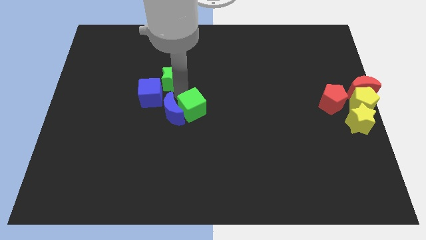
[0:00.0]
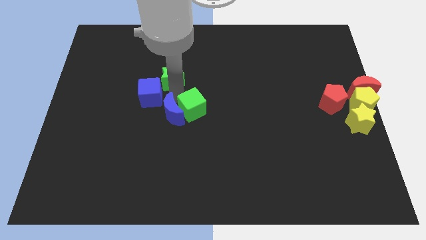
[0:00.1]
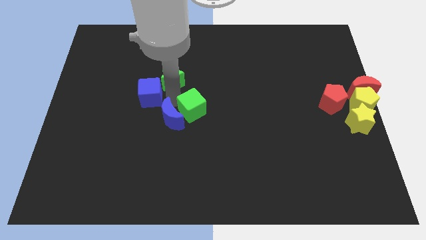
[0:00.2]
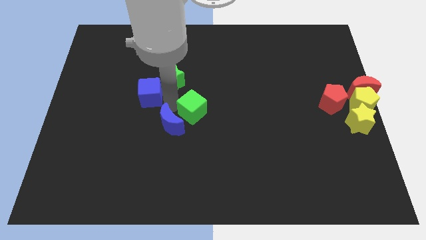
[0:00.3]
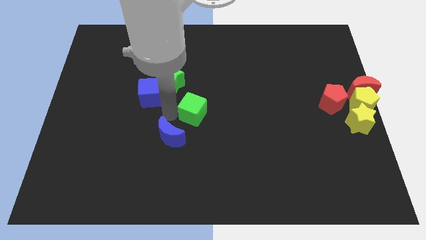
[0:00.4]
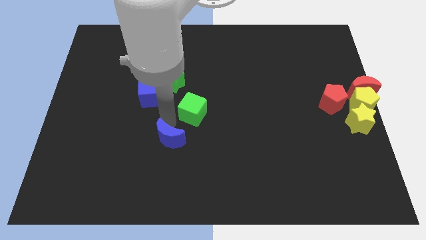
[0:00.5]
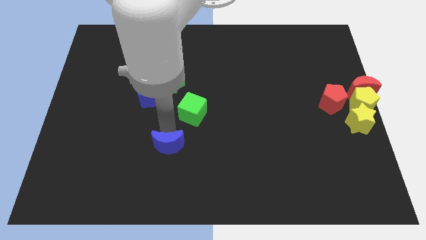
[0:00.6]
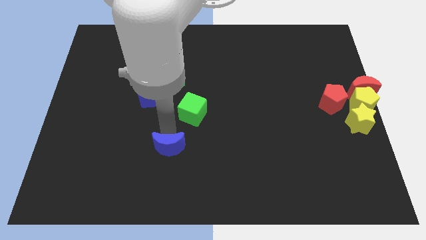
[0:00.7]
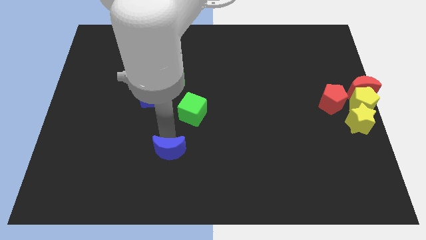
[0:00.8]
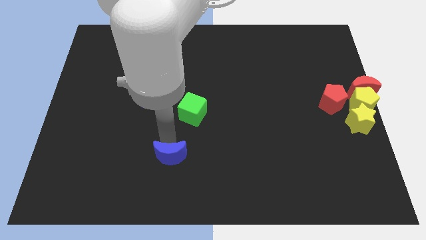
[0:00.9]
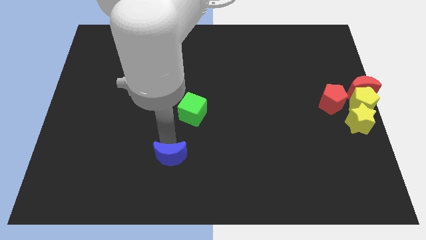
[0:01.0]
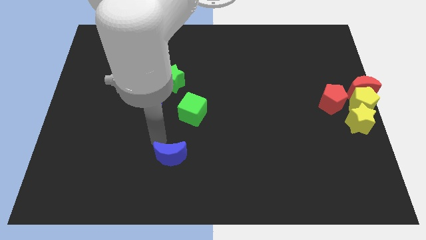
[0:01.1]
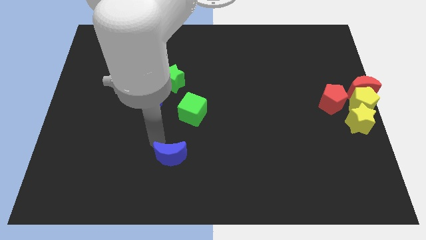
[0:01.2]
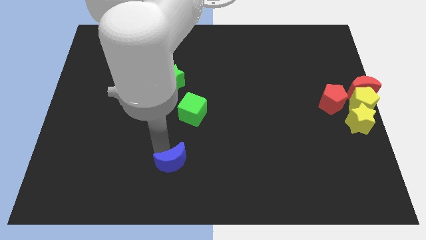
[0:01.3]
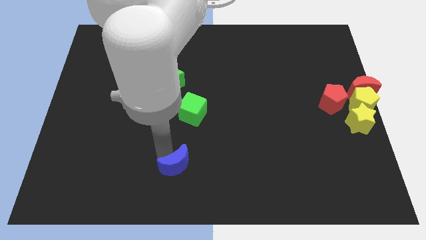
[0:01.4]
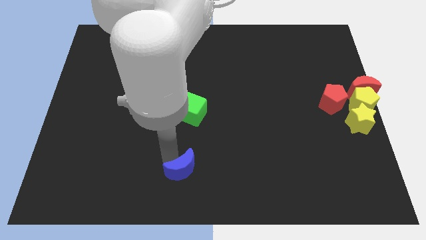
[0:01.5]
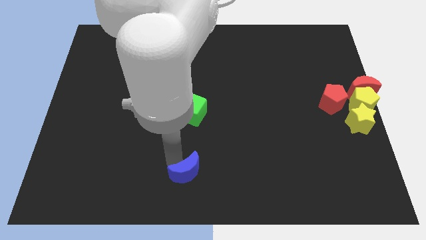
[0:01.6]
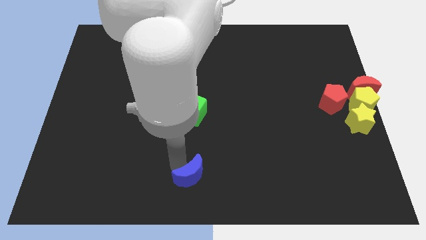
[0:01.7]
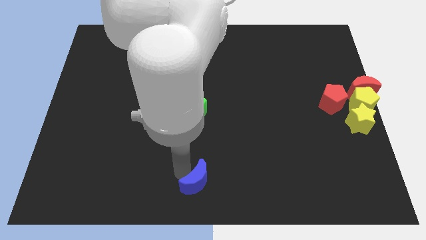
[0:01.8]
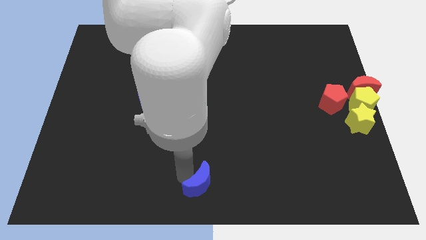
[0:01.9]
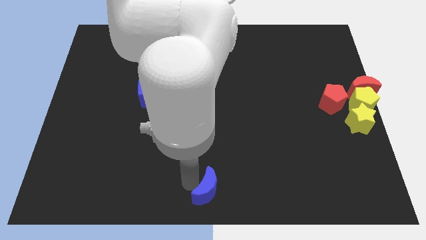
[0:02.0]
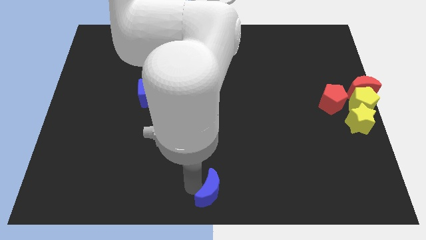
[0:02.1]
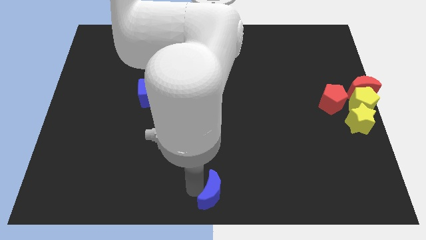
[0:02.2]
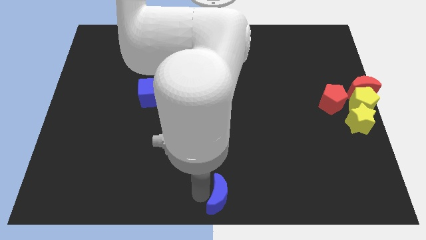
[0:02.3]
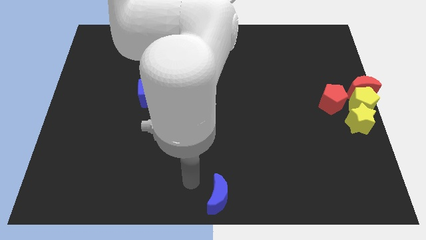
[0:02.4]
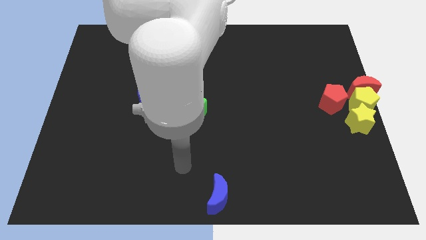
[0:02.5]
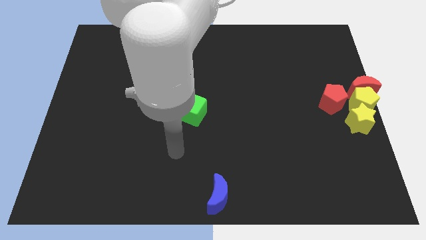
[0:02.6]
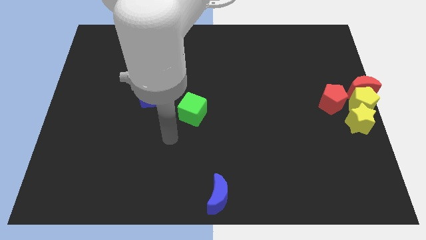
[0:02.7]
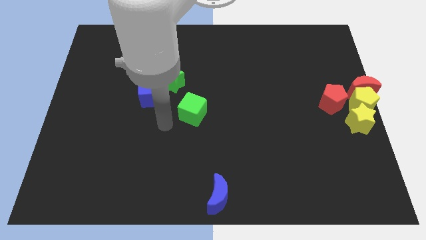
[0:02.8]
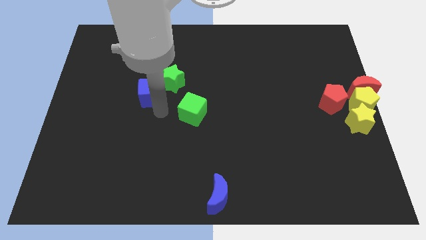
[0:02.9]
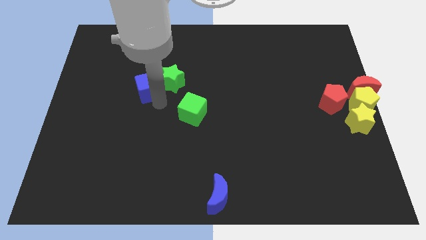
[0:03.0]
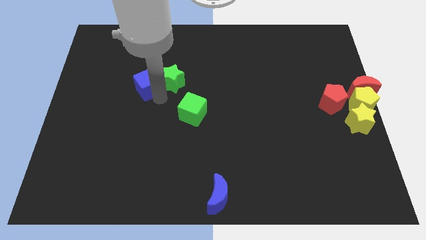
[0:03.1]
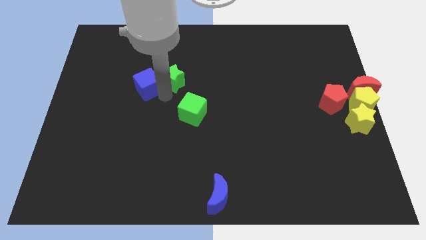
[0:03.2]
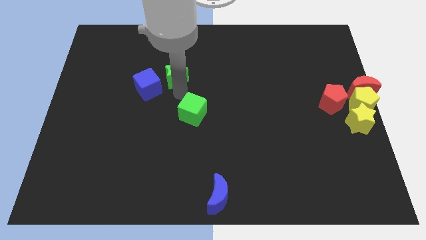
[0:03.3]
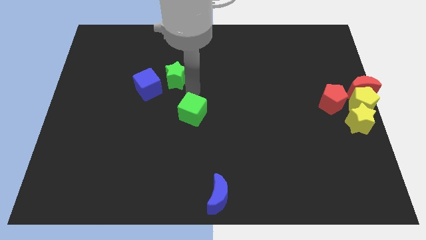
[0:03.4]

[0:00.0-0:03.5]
push the blue moon to the bottom center of the board

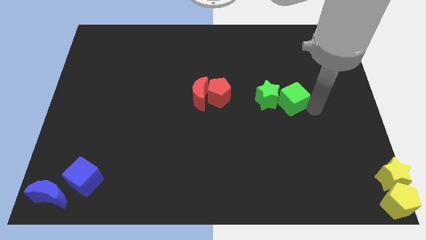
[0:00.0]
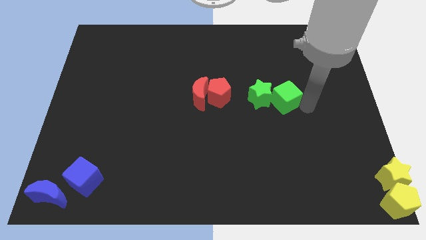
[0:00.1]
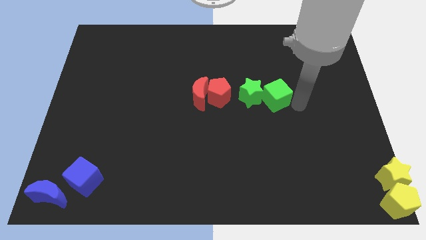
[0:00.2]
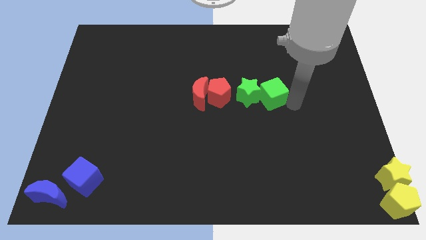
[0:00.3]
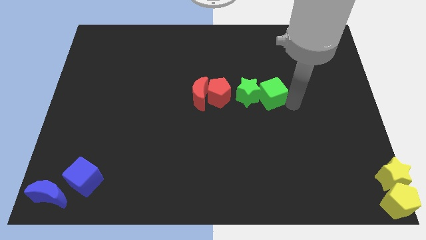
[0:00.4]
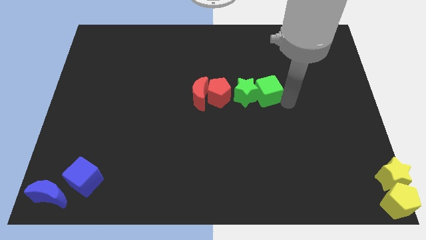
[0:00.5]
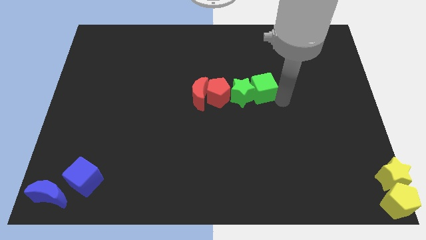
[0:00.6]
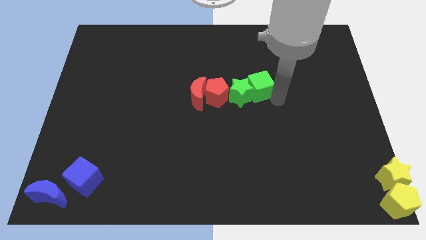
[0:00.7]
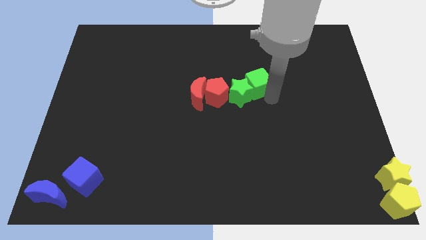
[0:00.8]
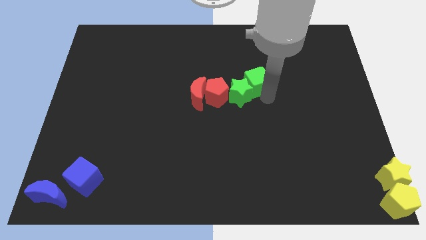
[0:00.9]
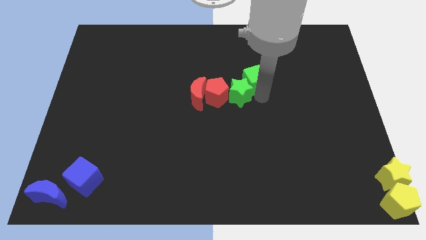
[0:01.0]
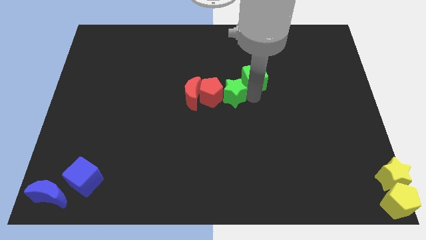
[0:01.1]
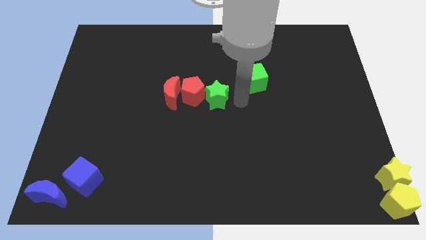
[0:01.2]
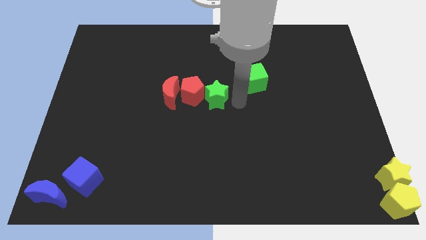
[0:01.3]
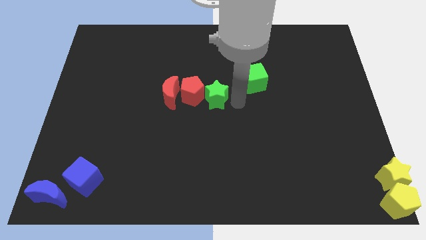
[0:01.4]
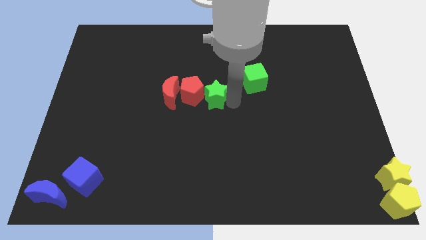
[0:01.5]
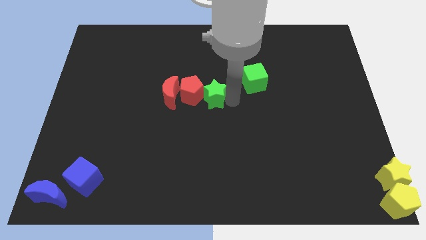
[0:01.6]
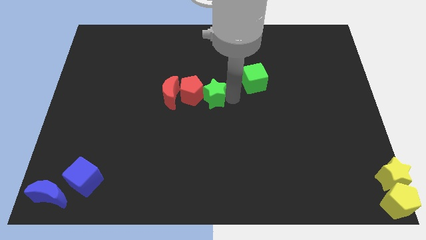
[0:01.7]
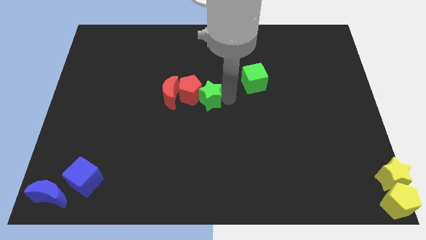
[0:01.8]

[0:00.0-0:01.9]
push the green star into the red pentagon

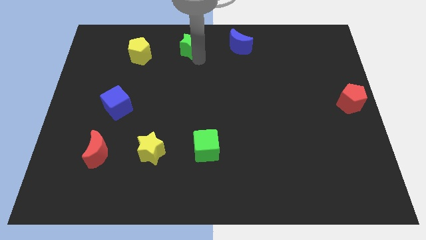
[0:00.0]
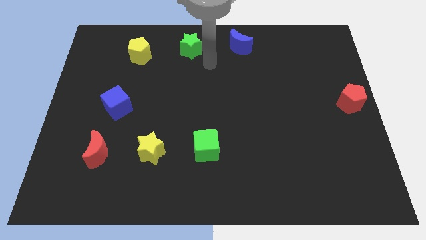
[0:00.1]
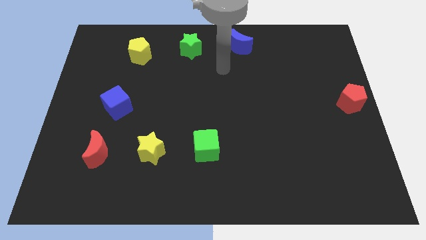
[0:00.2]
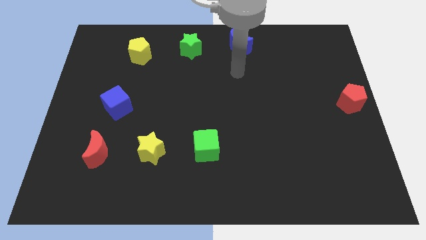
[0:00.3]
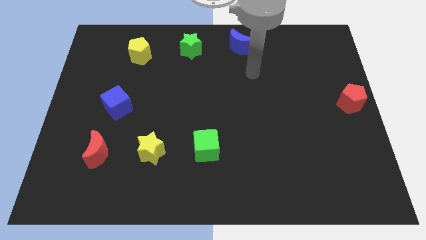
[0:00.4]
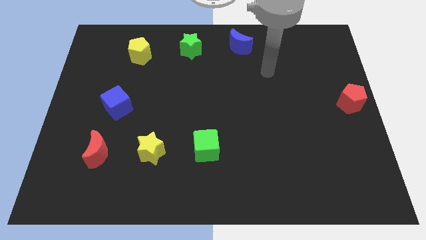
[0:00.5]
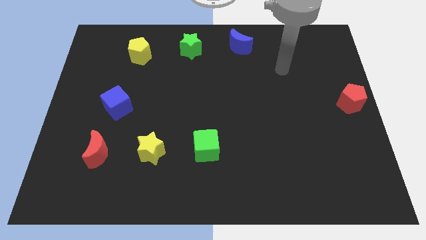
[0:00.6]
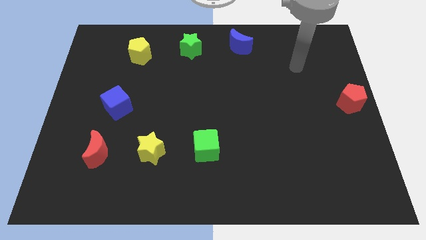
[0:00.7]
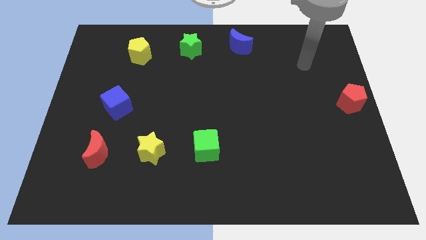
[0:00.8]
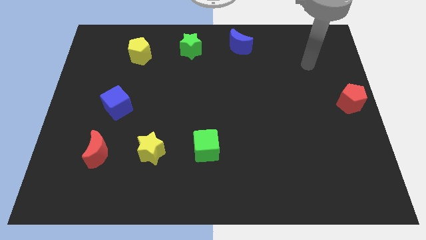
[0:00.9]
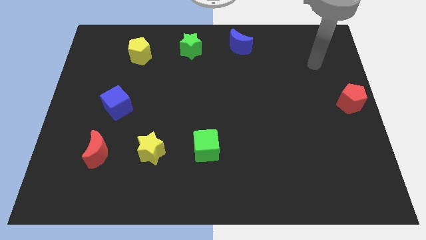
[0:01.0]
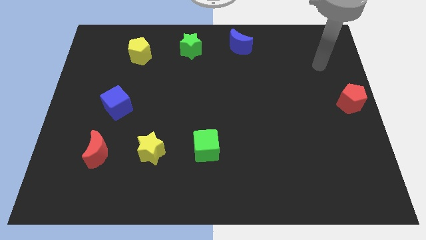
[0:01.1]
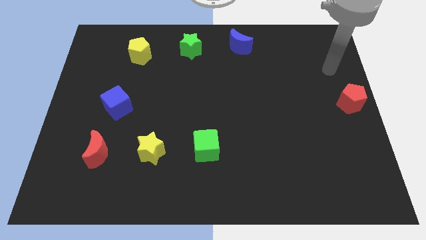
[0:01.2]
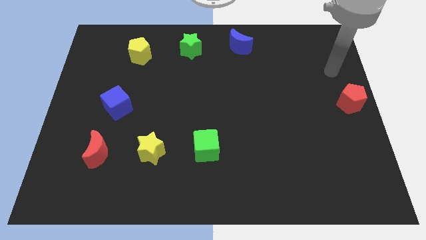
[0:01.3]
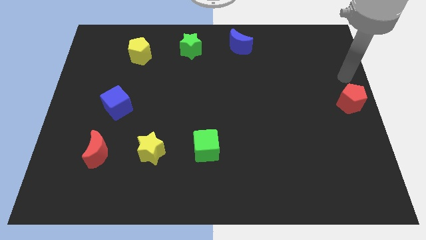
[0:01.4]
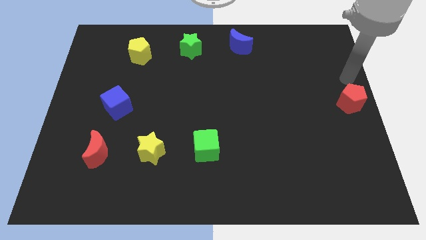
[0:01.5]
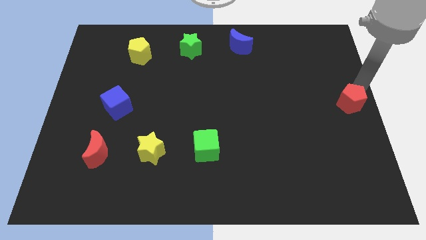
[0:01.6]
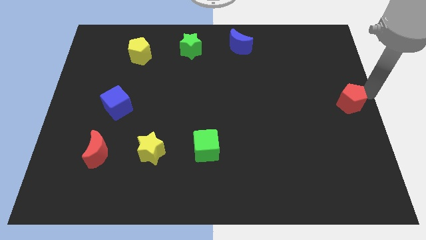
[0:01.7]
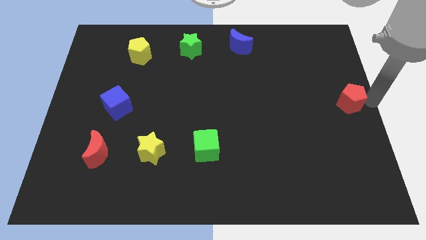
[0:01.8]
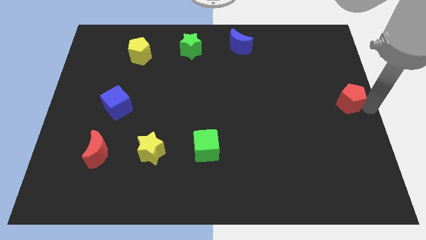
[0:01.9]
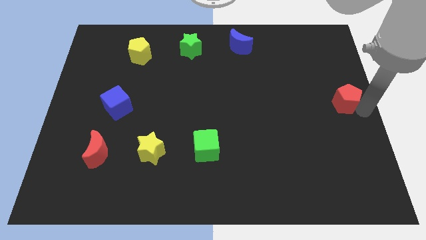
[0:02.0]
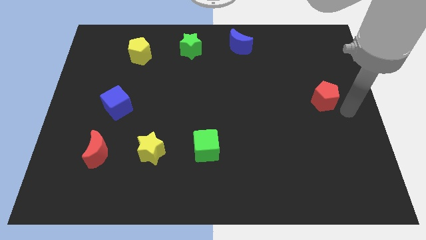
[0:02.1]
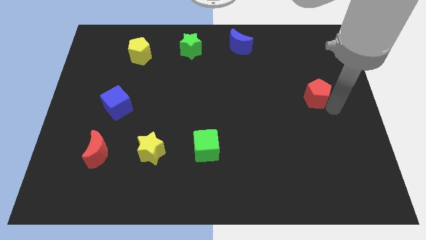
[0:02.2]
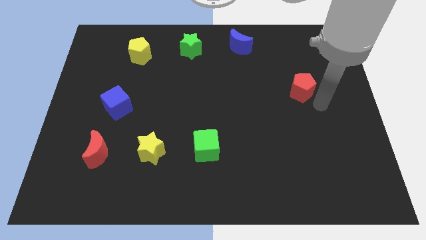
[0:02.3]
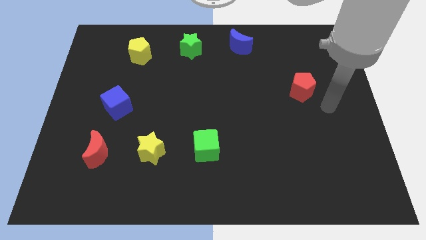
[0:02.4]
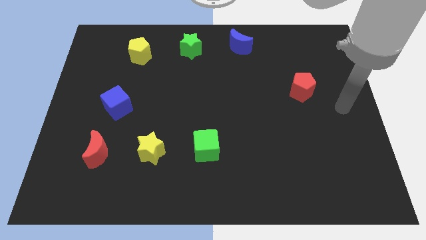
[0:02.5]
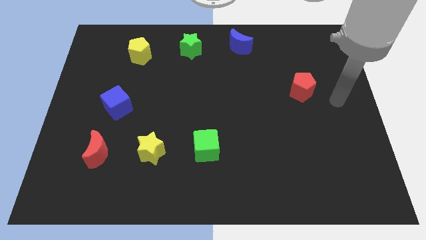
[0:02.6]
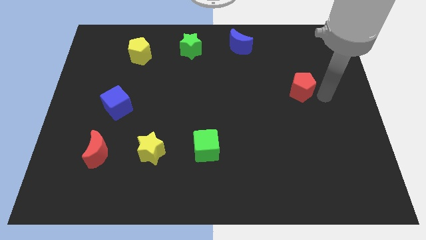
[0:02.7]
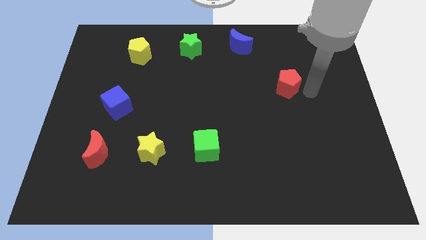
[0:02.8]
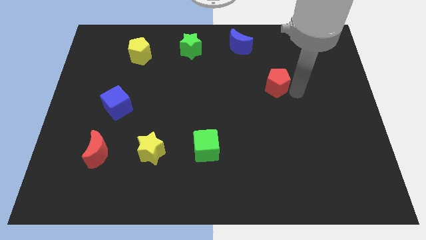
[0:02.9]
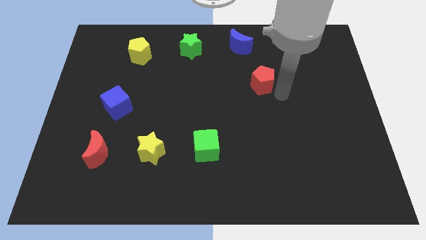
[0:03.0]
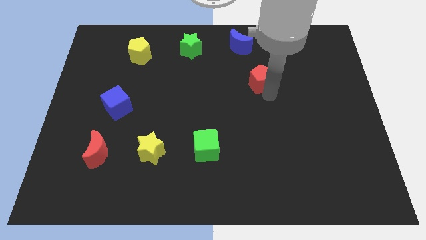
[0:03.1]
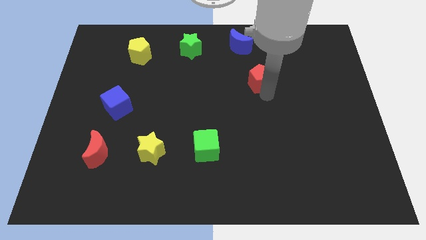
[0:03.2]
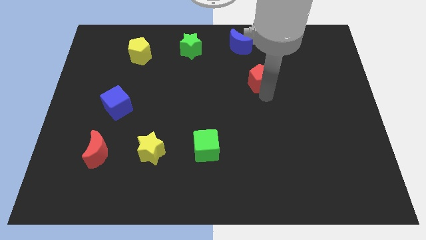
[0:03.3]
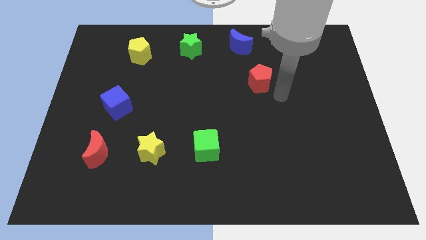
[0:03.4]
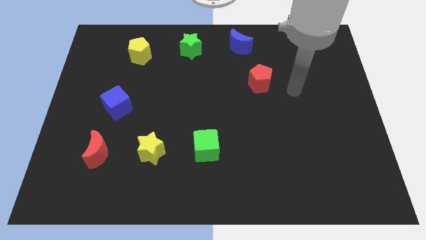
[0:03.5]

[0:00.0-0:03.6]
push the red pentagon towards the center of the board
